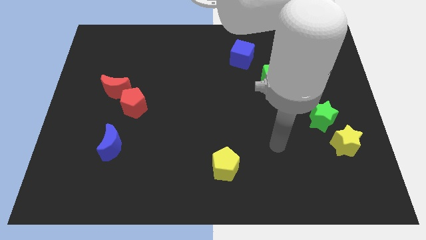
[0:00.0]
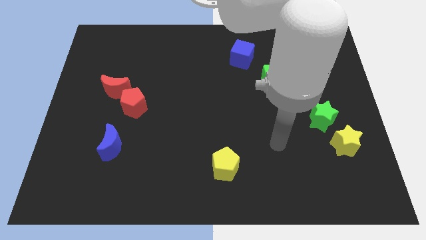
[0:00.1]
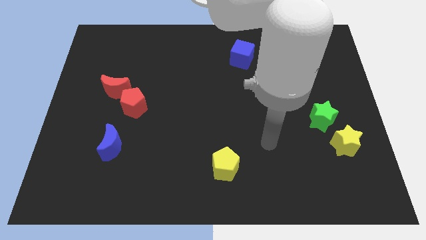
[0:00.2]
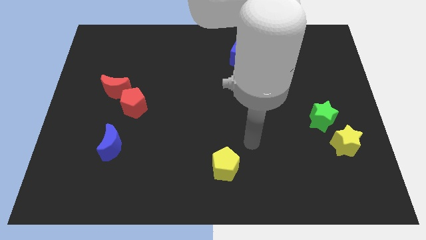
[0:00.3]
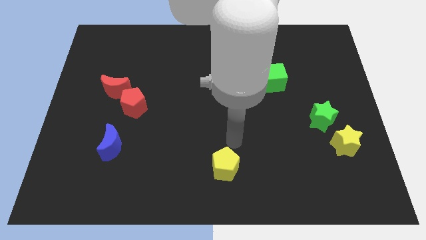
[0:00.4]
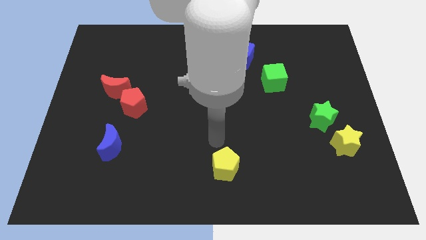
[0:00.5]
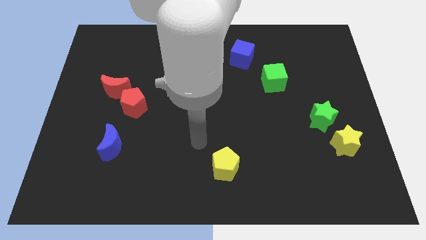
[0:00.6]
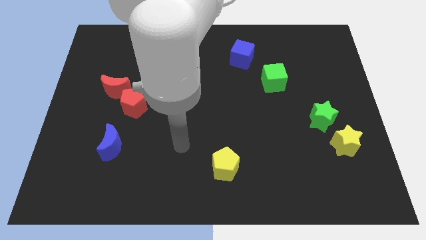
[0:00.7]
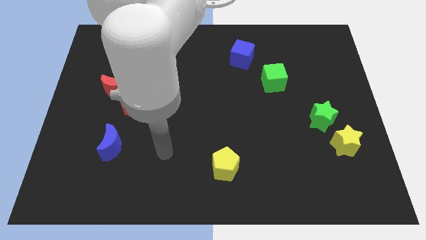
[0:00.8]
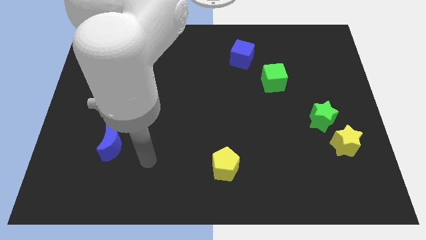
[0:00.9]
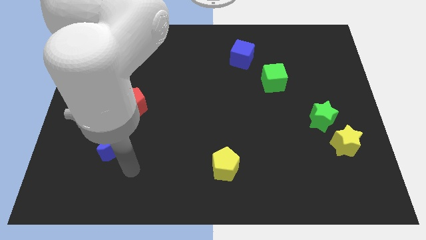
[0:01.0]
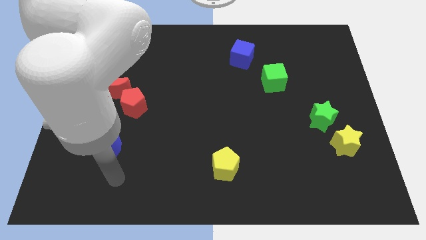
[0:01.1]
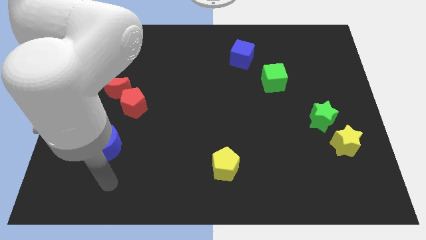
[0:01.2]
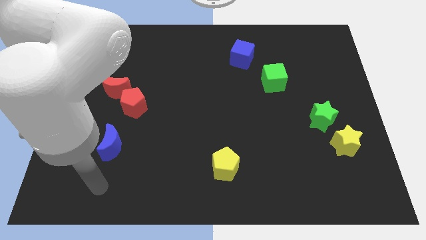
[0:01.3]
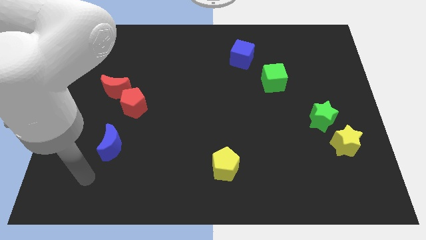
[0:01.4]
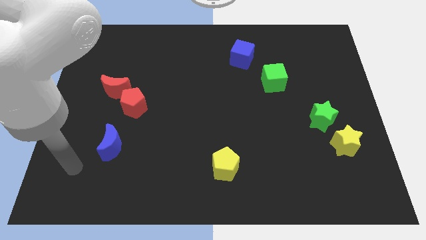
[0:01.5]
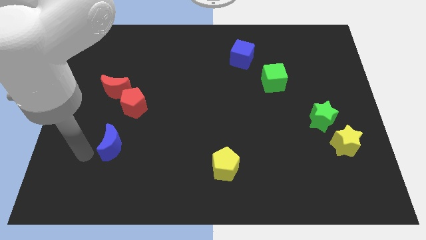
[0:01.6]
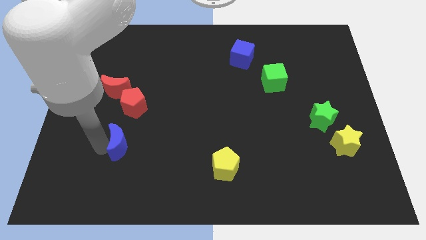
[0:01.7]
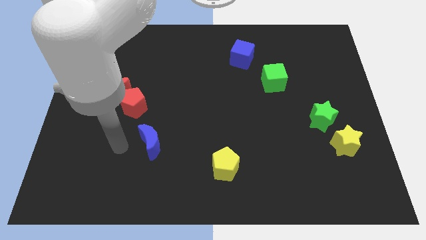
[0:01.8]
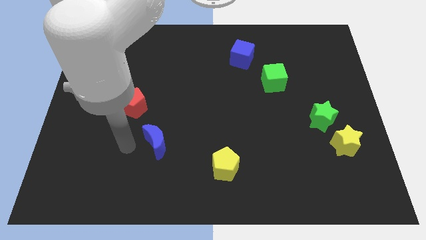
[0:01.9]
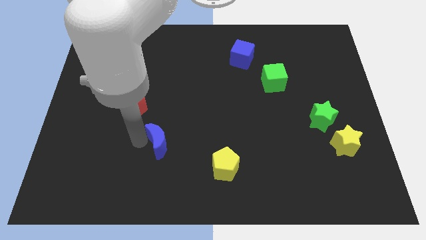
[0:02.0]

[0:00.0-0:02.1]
move the blue crescent to the right of the board

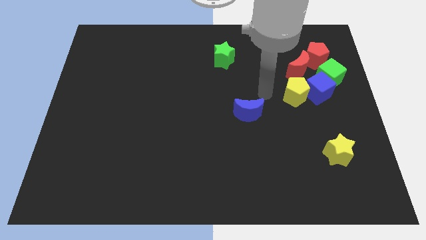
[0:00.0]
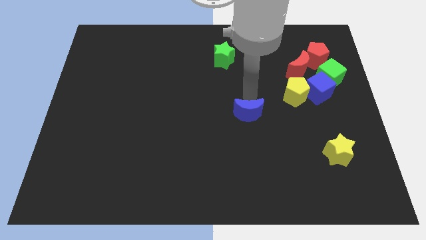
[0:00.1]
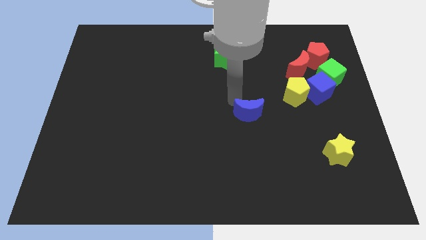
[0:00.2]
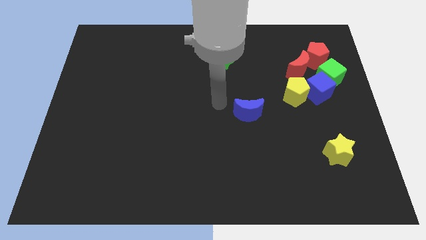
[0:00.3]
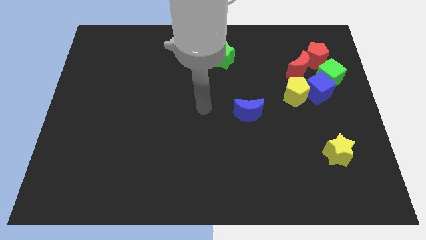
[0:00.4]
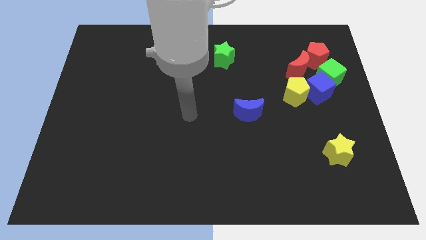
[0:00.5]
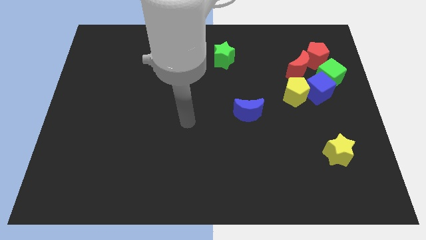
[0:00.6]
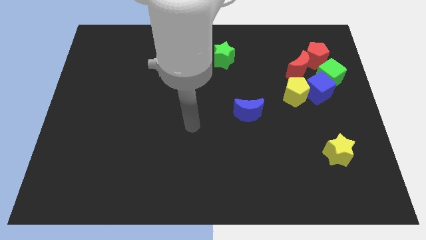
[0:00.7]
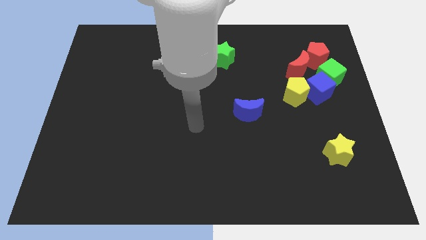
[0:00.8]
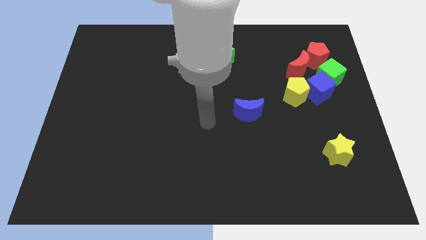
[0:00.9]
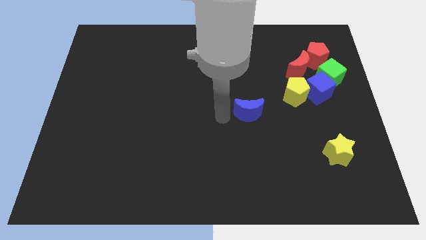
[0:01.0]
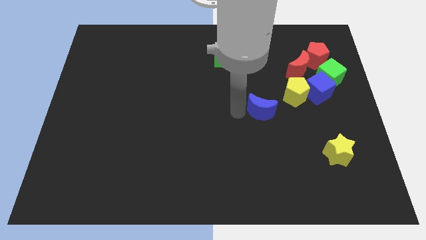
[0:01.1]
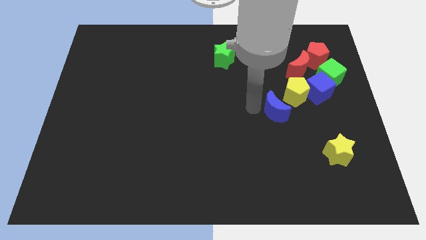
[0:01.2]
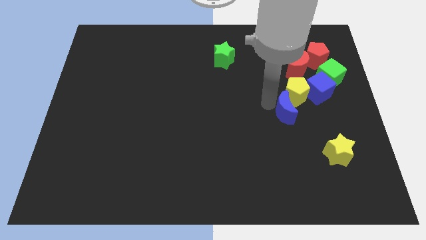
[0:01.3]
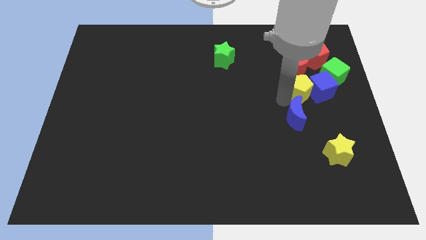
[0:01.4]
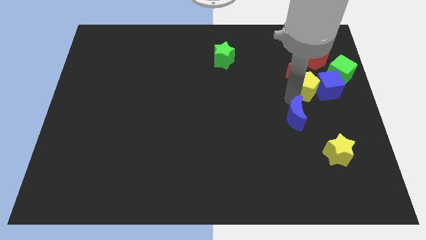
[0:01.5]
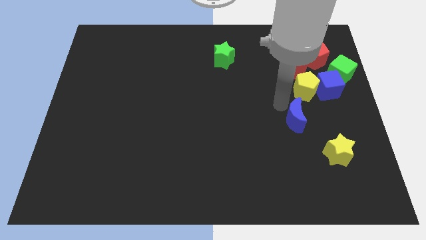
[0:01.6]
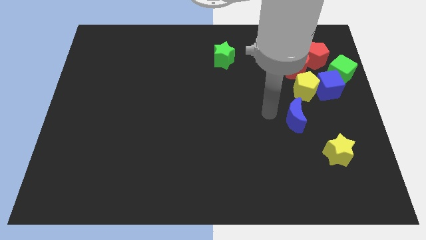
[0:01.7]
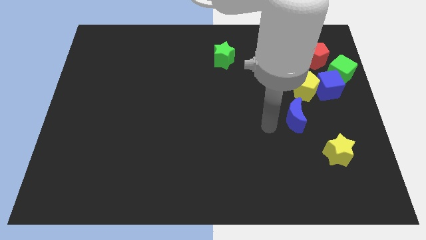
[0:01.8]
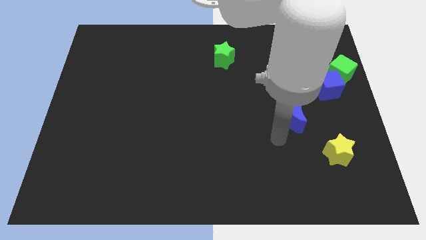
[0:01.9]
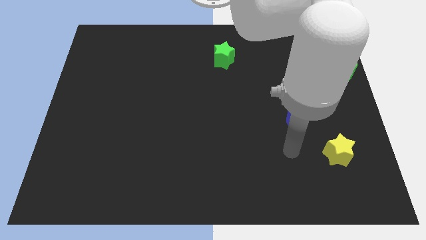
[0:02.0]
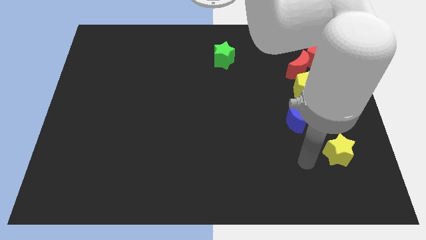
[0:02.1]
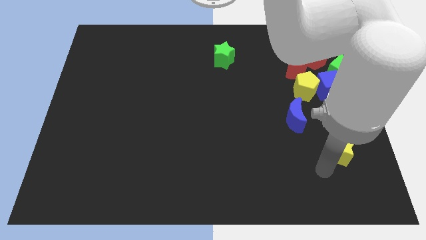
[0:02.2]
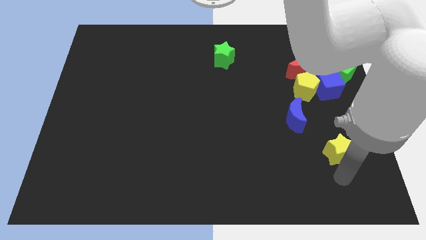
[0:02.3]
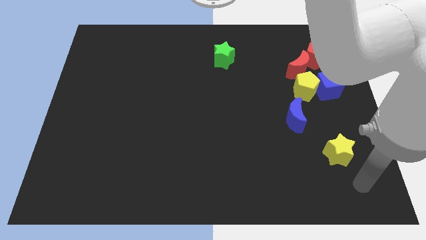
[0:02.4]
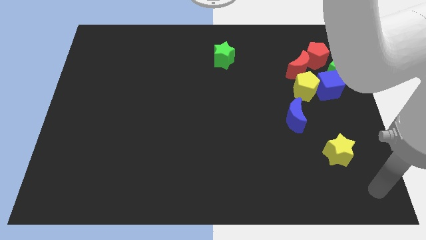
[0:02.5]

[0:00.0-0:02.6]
place the blue crescent below the yellow pentagon

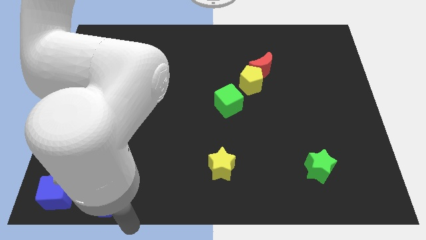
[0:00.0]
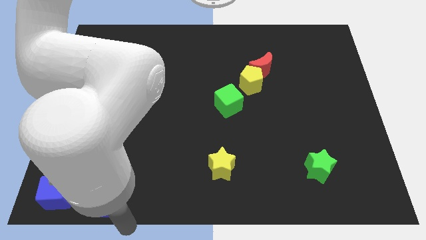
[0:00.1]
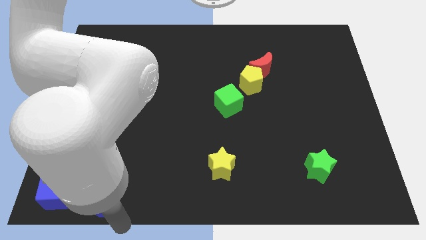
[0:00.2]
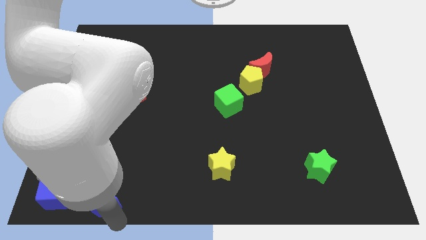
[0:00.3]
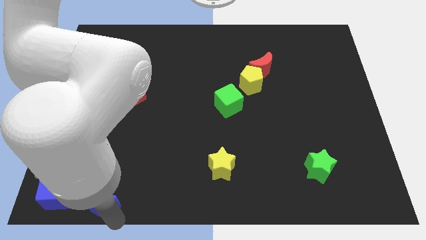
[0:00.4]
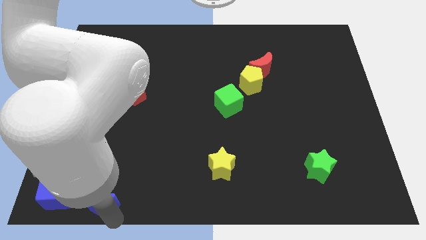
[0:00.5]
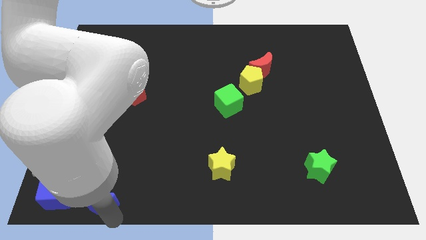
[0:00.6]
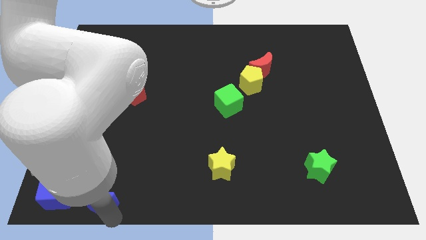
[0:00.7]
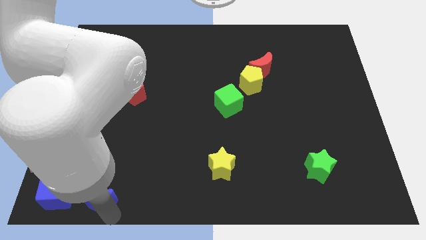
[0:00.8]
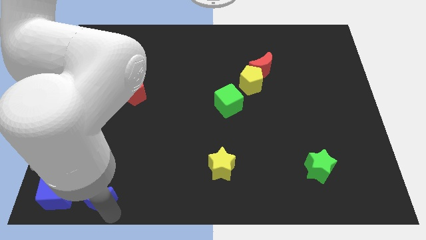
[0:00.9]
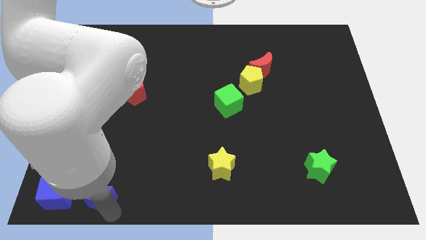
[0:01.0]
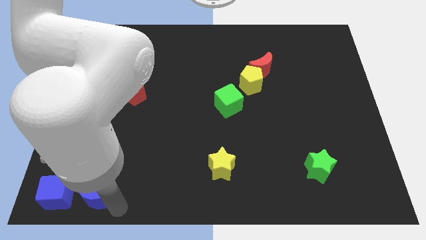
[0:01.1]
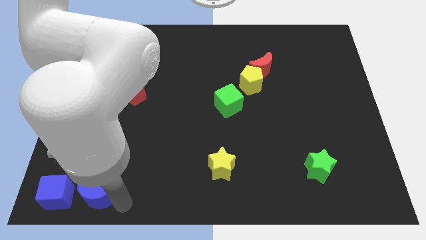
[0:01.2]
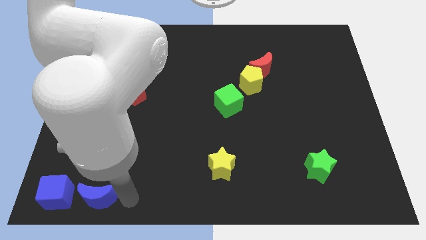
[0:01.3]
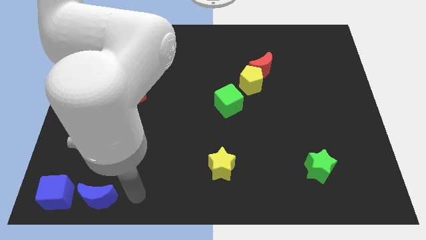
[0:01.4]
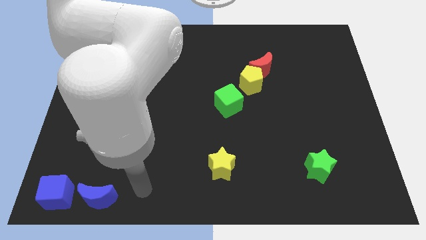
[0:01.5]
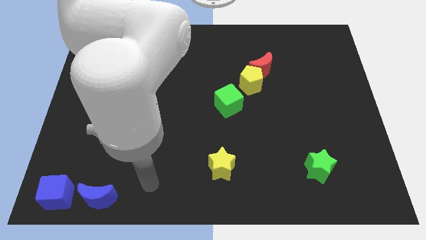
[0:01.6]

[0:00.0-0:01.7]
place blue crescent beside blue cube

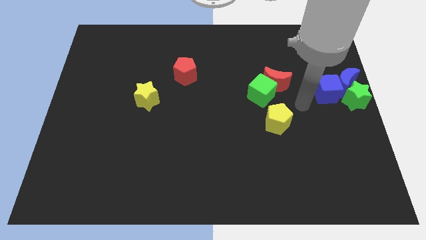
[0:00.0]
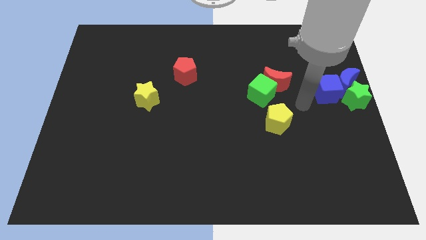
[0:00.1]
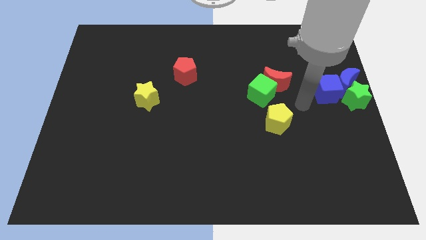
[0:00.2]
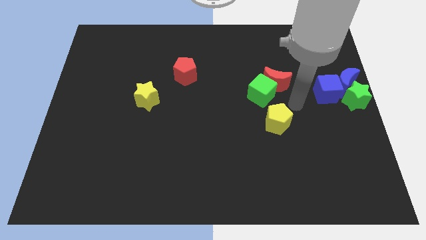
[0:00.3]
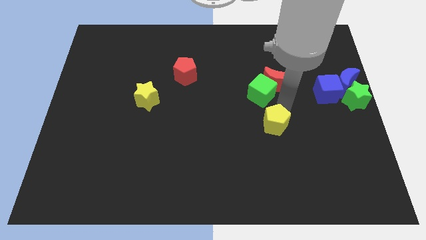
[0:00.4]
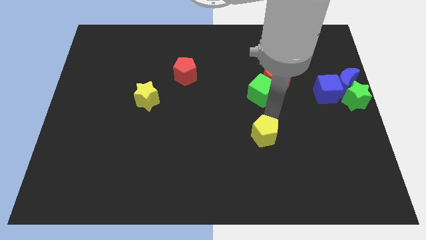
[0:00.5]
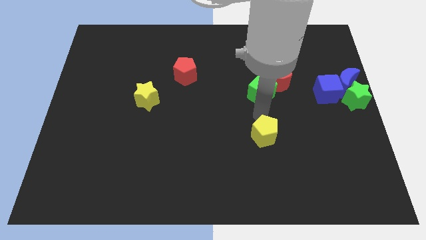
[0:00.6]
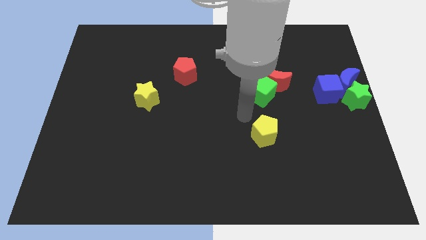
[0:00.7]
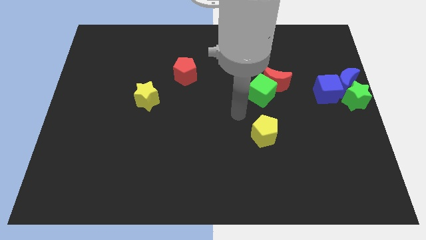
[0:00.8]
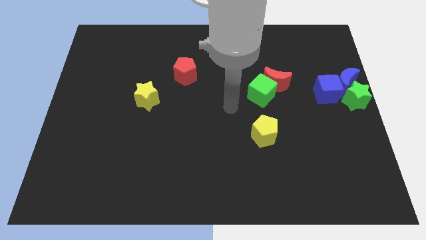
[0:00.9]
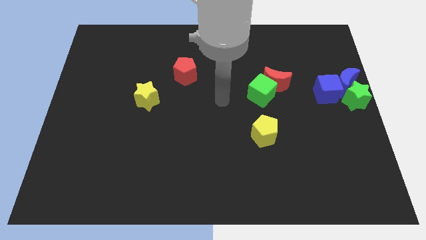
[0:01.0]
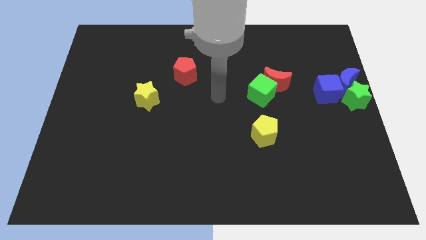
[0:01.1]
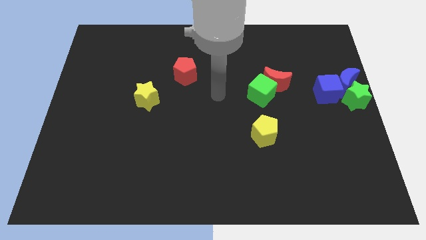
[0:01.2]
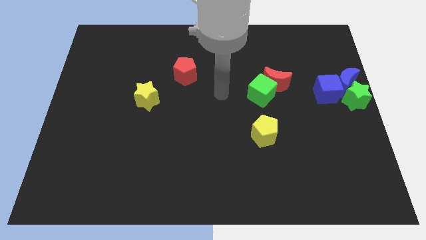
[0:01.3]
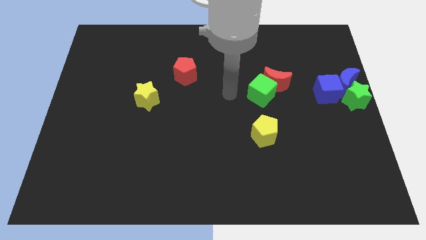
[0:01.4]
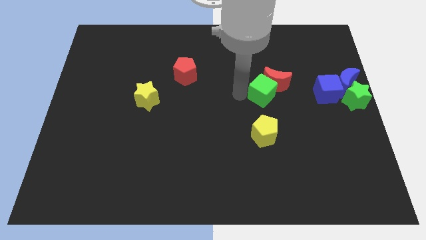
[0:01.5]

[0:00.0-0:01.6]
place the yellow pentagon vertically below the green cube

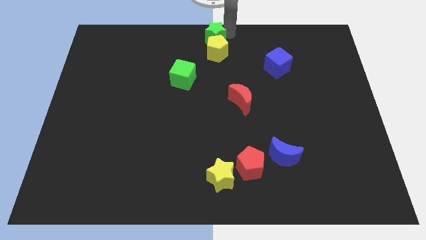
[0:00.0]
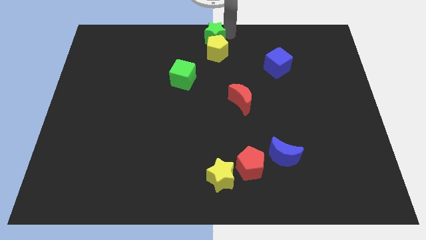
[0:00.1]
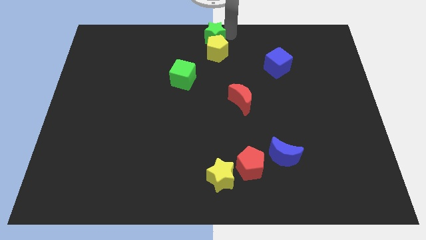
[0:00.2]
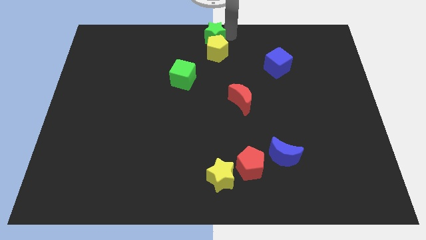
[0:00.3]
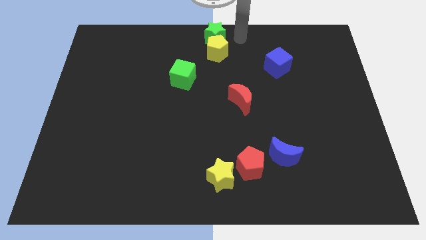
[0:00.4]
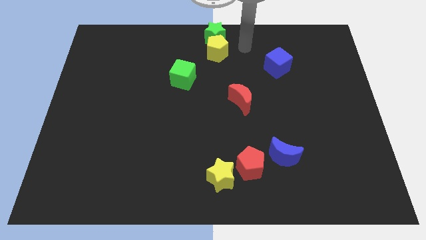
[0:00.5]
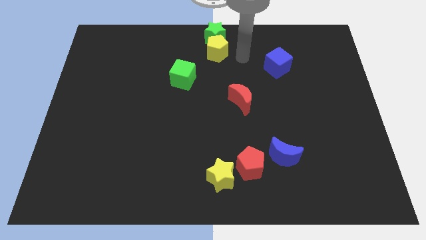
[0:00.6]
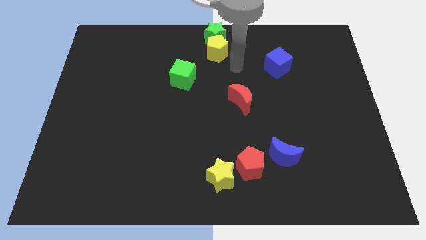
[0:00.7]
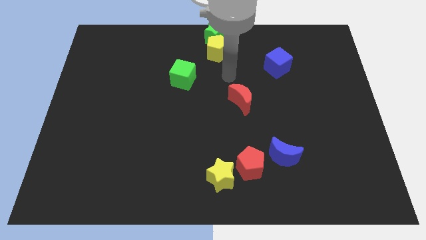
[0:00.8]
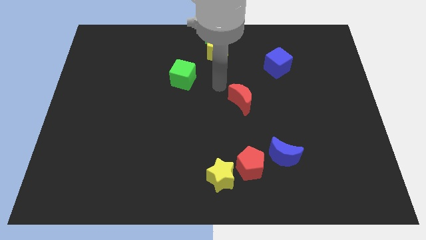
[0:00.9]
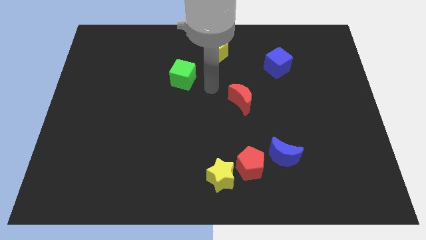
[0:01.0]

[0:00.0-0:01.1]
move the arm away from the green star
